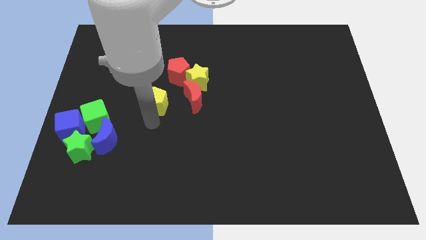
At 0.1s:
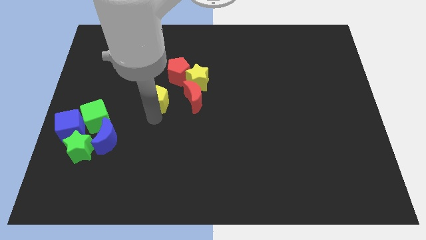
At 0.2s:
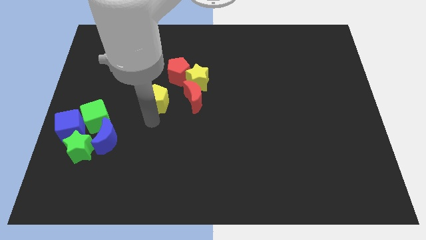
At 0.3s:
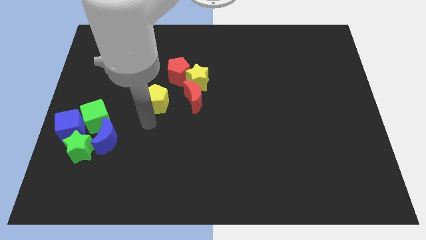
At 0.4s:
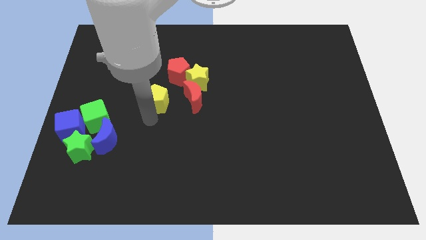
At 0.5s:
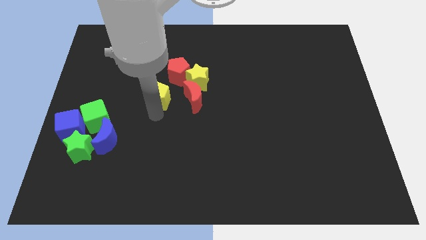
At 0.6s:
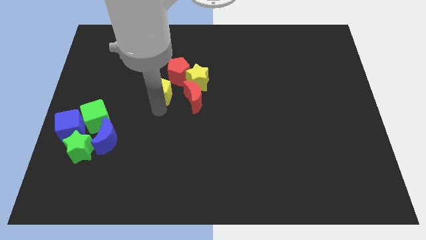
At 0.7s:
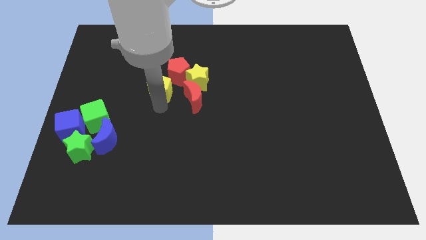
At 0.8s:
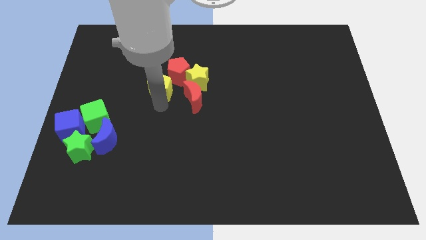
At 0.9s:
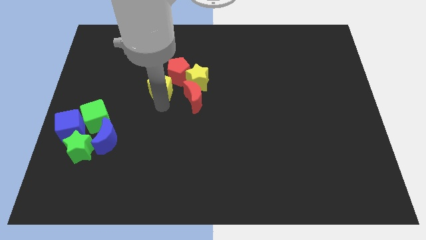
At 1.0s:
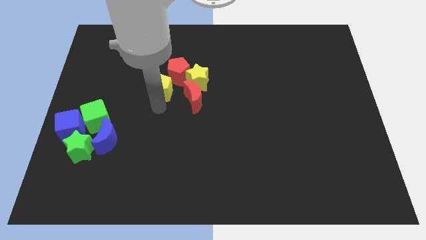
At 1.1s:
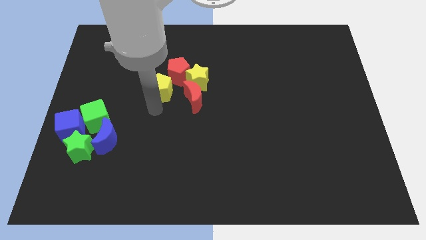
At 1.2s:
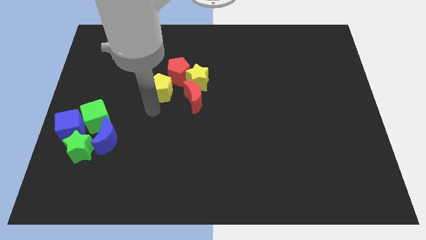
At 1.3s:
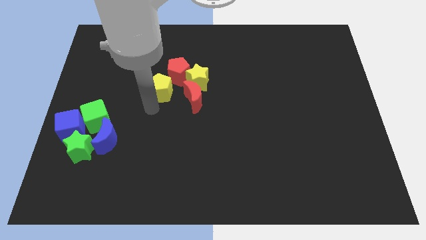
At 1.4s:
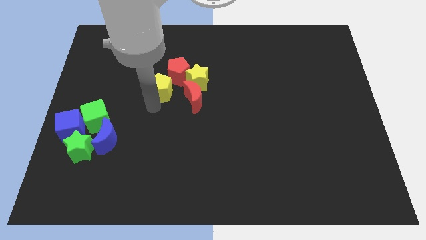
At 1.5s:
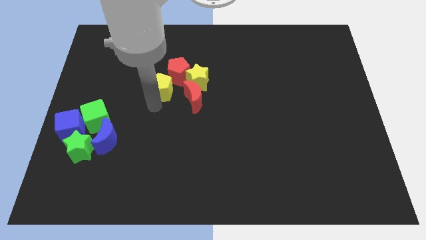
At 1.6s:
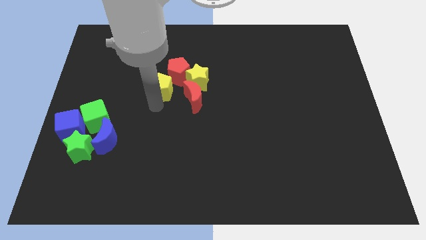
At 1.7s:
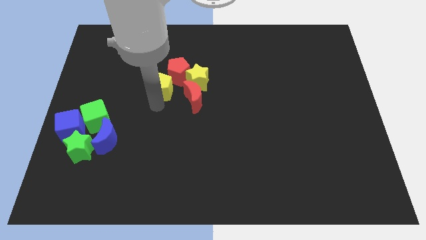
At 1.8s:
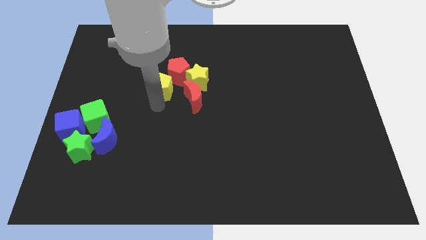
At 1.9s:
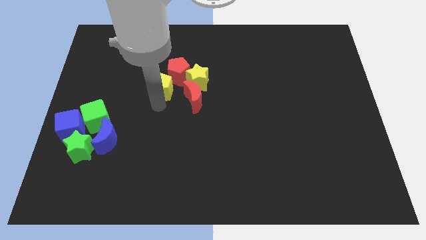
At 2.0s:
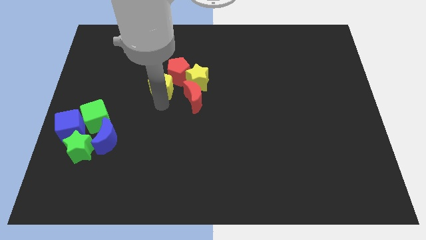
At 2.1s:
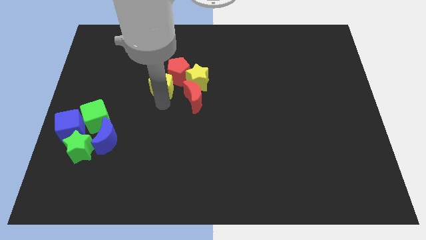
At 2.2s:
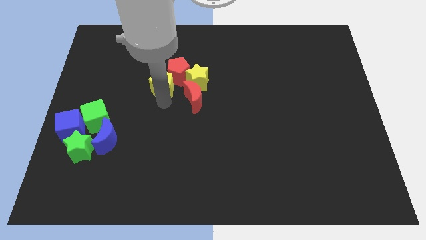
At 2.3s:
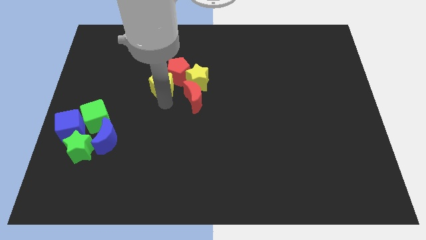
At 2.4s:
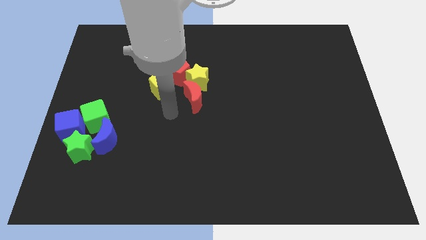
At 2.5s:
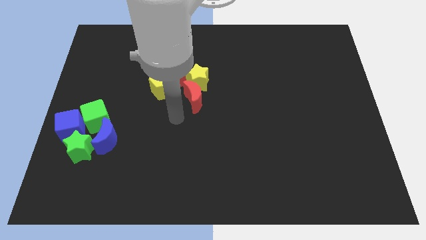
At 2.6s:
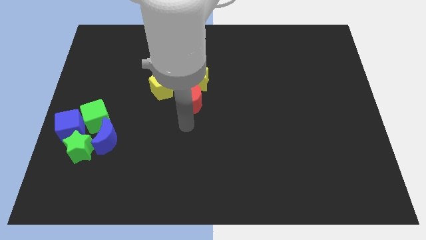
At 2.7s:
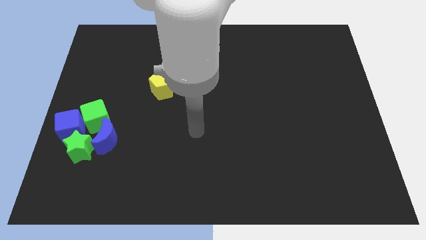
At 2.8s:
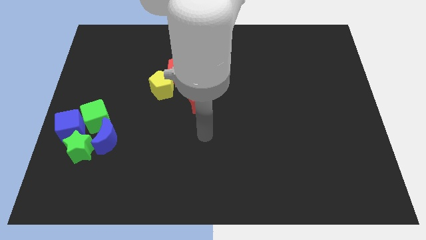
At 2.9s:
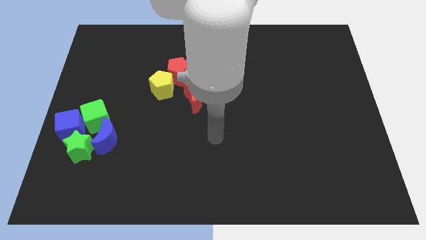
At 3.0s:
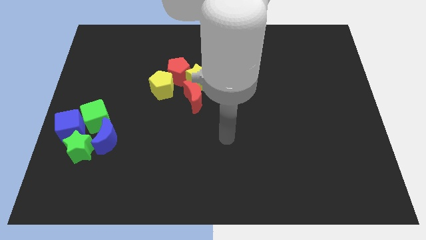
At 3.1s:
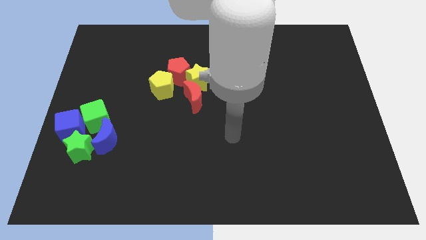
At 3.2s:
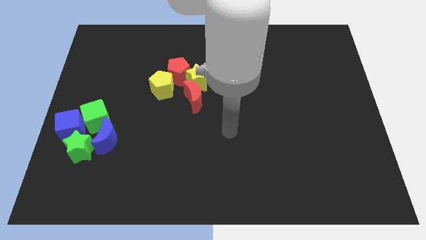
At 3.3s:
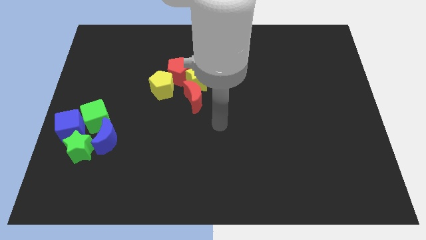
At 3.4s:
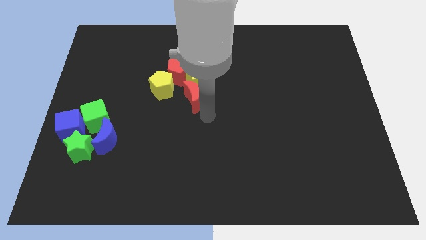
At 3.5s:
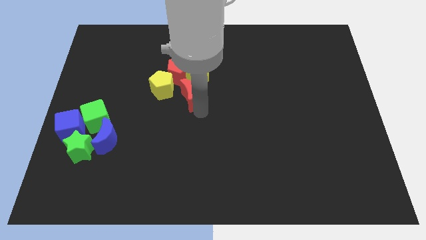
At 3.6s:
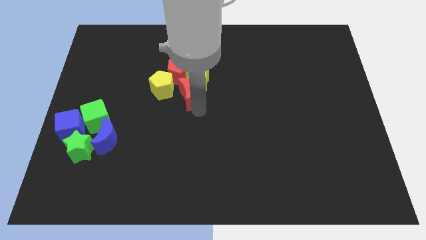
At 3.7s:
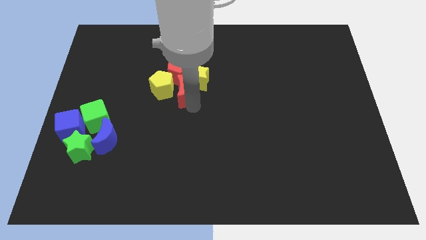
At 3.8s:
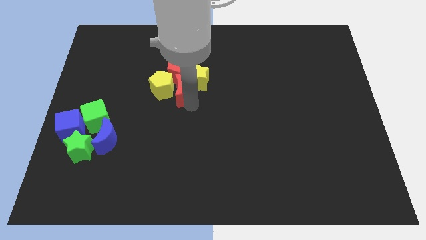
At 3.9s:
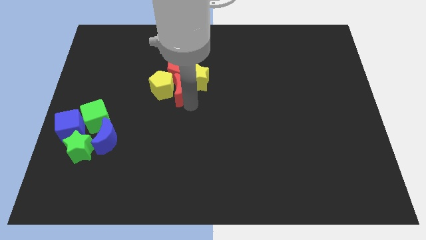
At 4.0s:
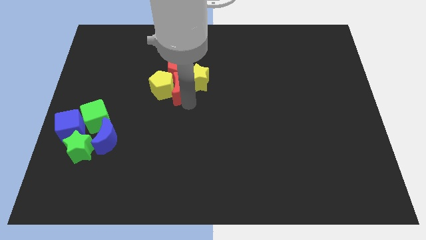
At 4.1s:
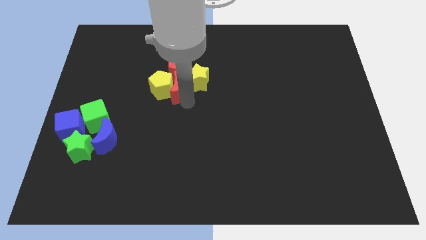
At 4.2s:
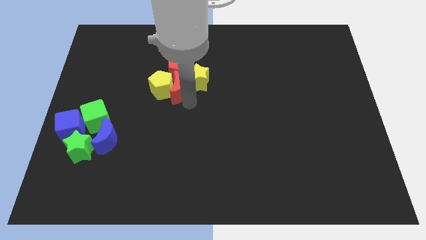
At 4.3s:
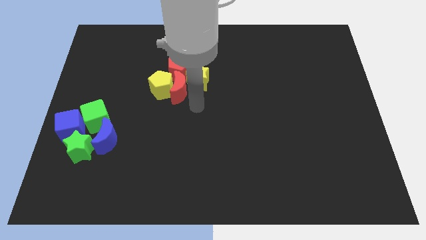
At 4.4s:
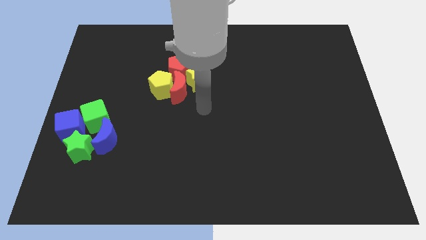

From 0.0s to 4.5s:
make a group of red blocks and yellow blocks

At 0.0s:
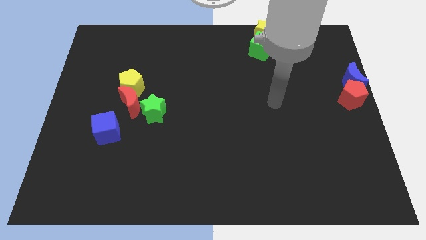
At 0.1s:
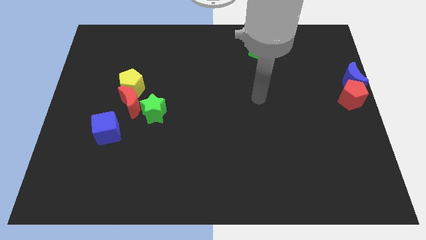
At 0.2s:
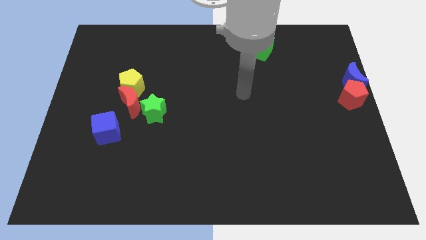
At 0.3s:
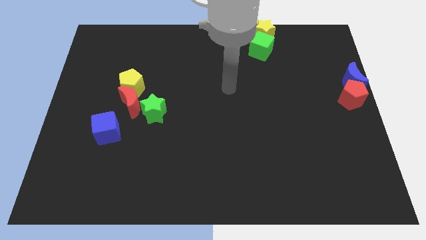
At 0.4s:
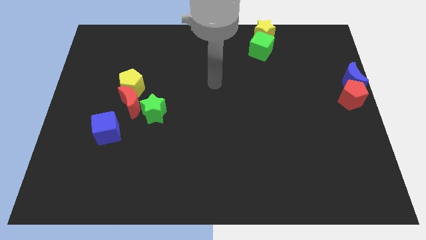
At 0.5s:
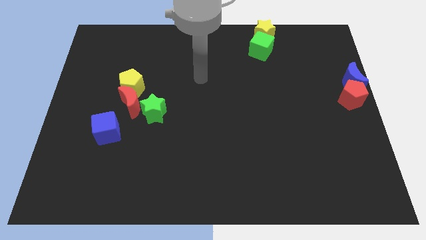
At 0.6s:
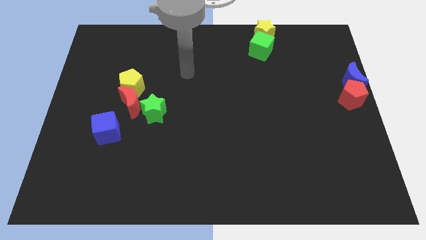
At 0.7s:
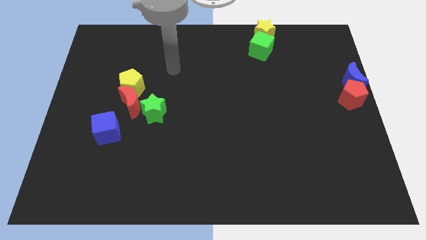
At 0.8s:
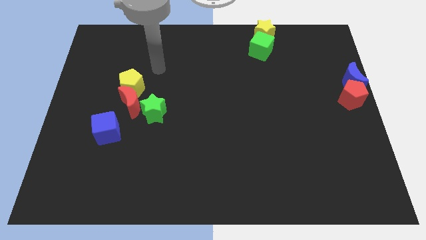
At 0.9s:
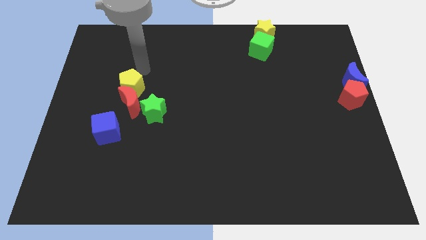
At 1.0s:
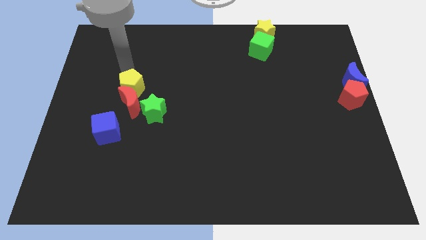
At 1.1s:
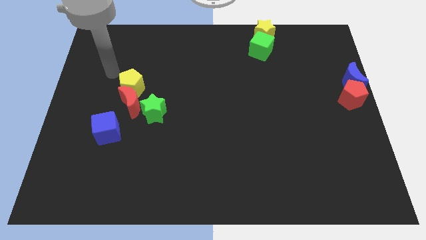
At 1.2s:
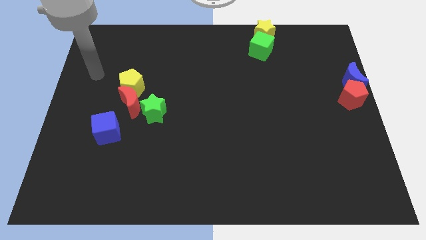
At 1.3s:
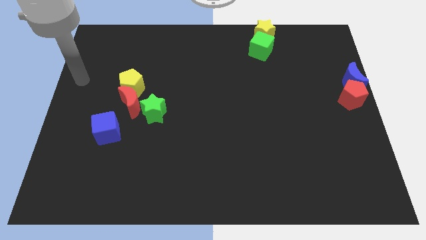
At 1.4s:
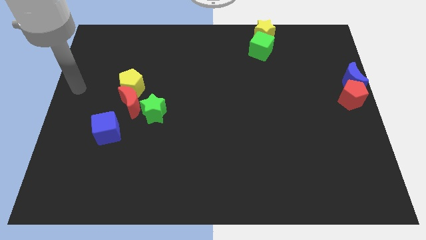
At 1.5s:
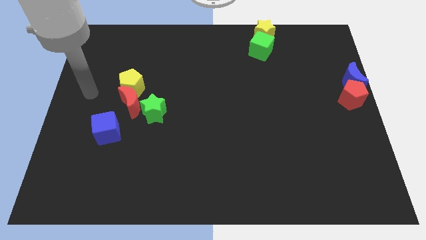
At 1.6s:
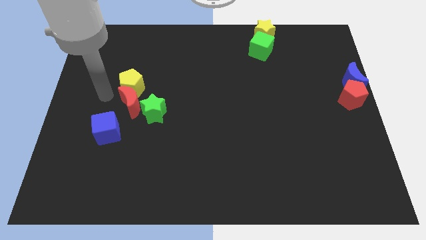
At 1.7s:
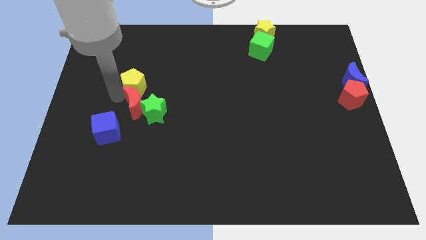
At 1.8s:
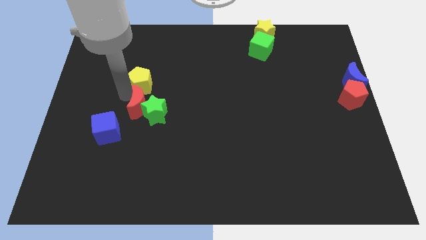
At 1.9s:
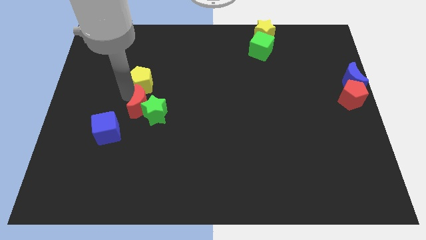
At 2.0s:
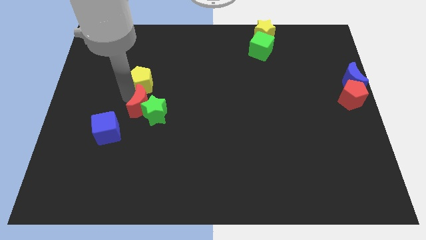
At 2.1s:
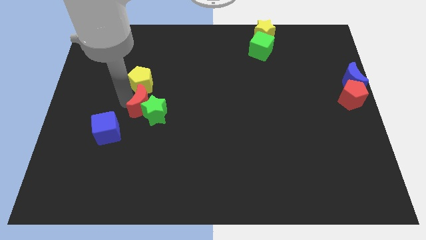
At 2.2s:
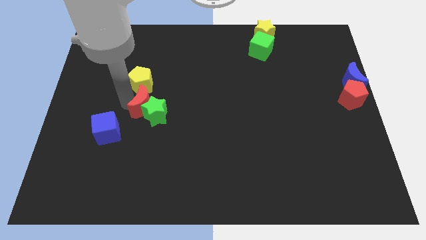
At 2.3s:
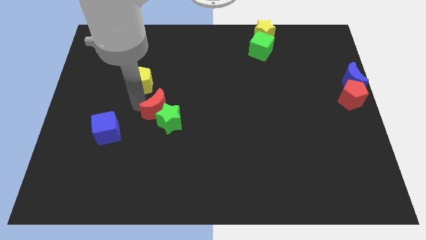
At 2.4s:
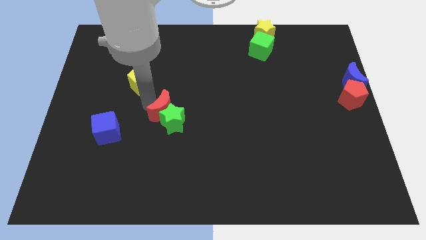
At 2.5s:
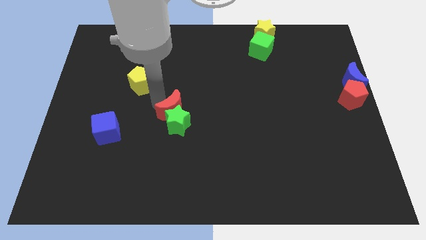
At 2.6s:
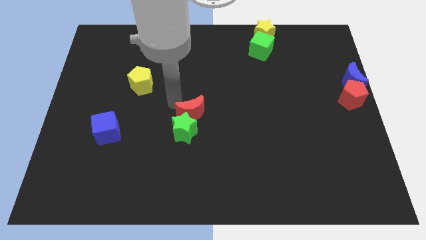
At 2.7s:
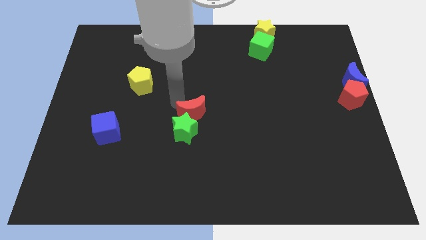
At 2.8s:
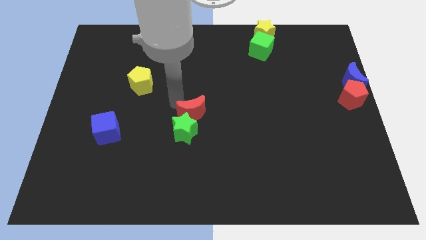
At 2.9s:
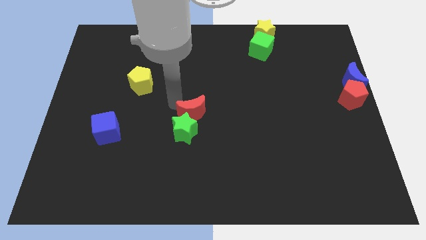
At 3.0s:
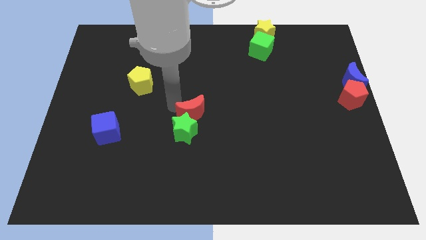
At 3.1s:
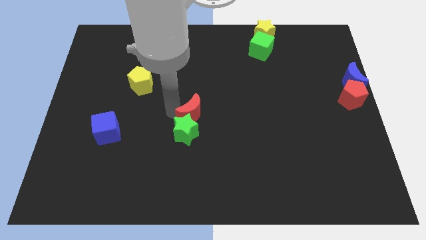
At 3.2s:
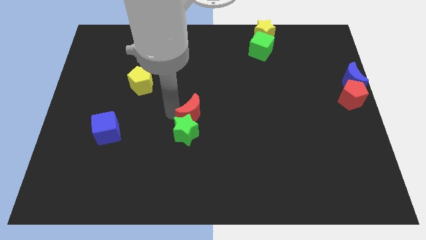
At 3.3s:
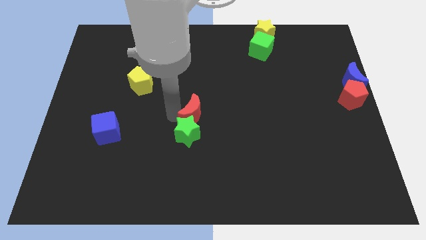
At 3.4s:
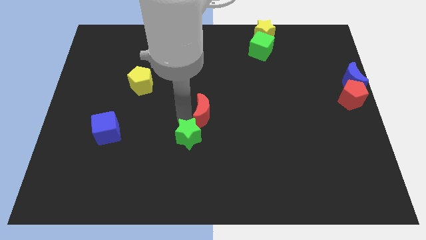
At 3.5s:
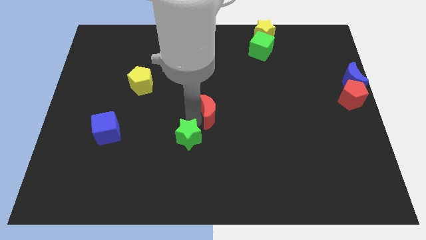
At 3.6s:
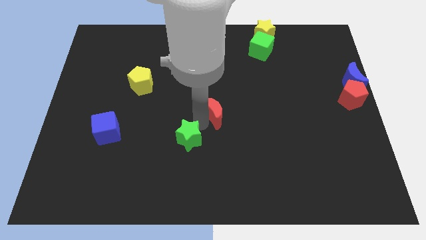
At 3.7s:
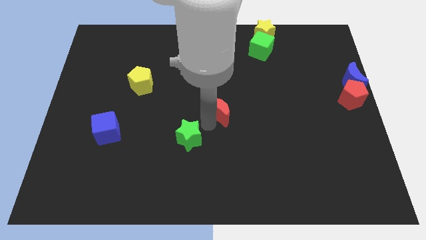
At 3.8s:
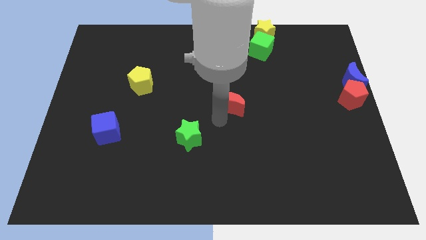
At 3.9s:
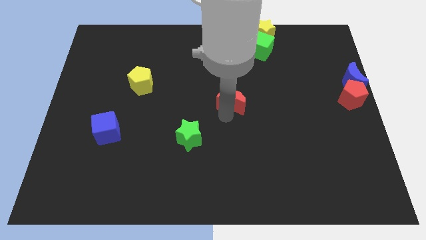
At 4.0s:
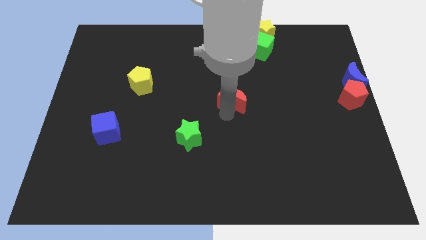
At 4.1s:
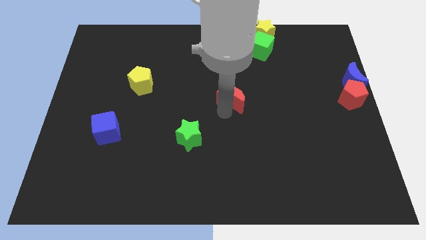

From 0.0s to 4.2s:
separate the yellow pentagon and red crescent

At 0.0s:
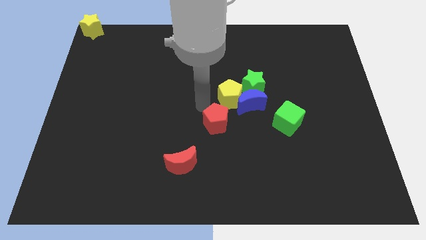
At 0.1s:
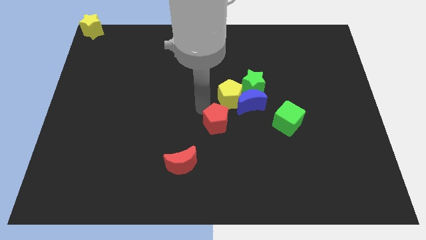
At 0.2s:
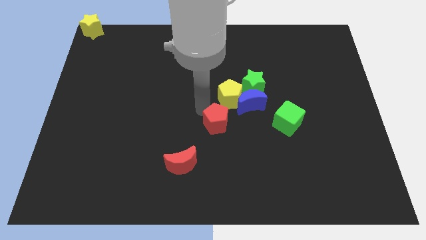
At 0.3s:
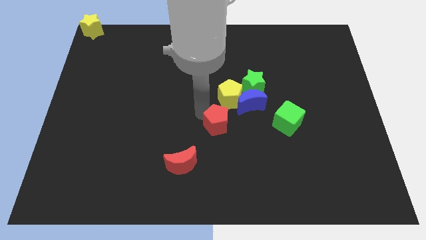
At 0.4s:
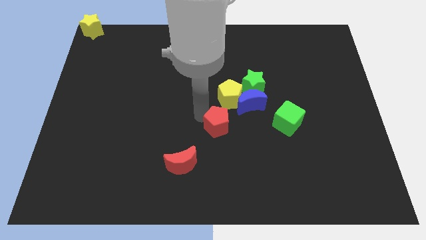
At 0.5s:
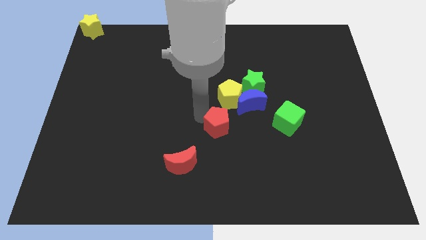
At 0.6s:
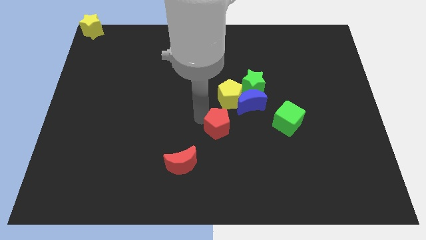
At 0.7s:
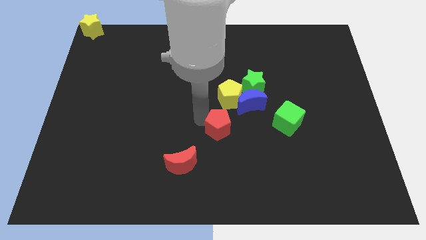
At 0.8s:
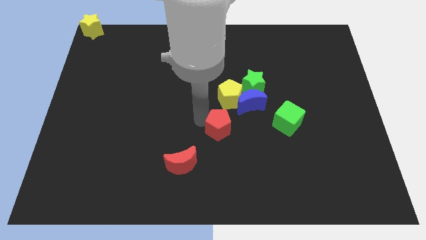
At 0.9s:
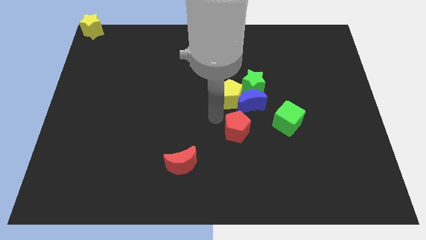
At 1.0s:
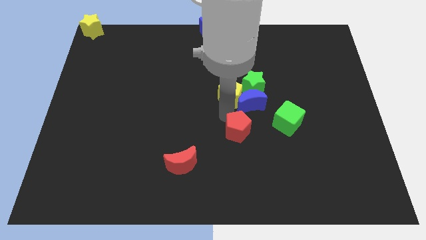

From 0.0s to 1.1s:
push the red pentagon towards the green cube
